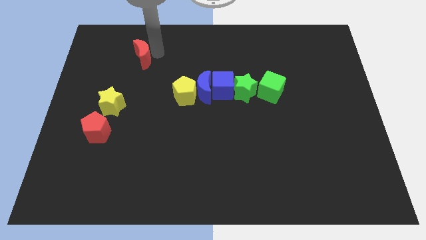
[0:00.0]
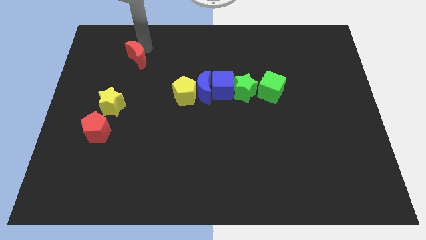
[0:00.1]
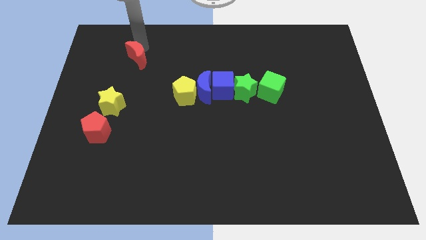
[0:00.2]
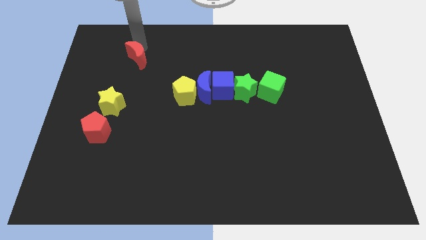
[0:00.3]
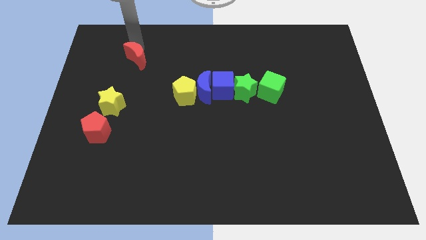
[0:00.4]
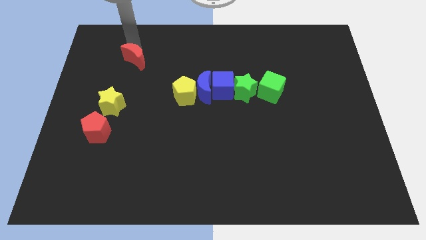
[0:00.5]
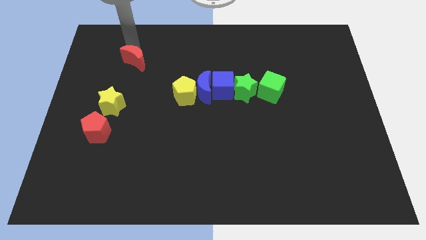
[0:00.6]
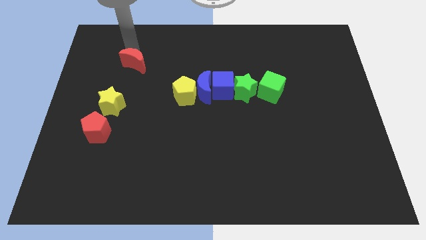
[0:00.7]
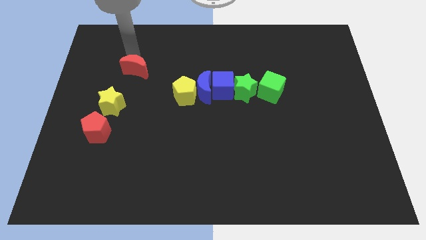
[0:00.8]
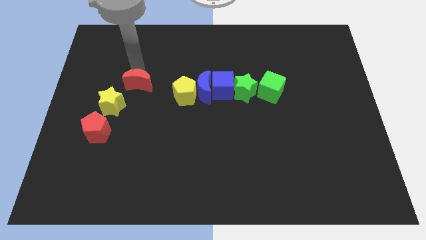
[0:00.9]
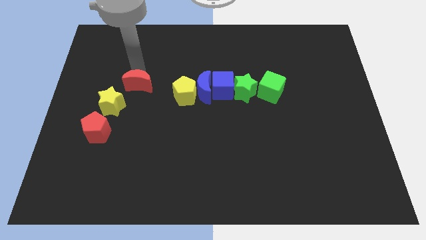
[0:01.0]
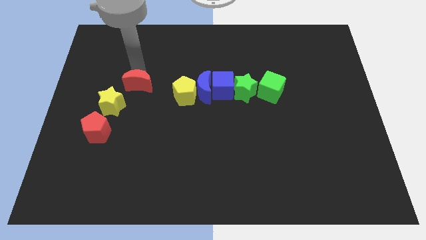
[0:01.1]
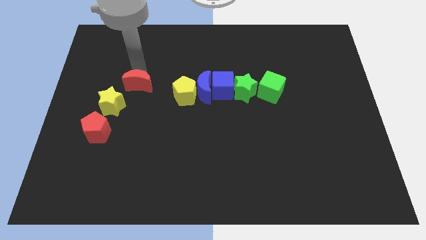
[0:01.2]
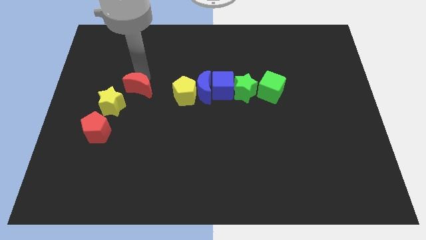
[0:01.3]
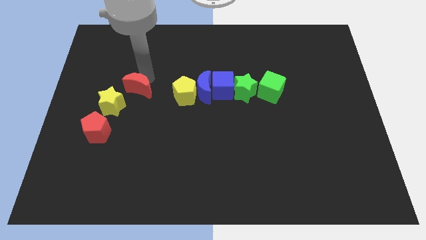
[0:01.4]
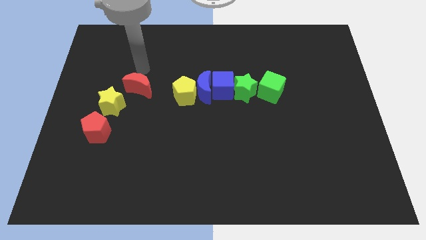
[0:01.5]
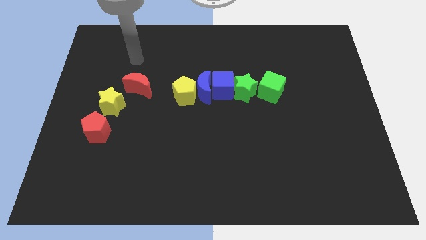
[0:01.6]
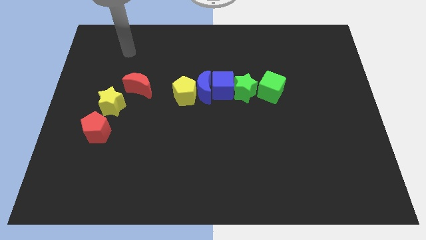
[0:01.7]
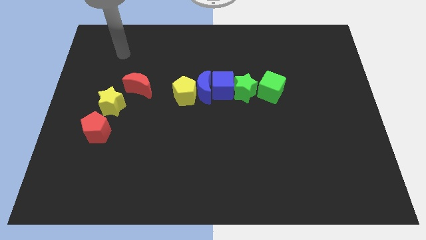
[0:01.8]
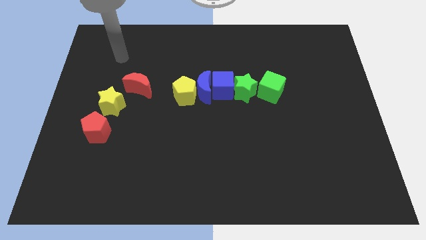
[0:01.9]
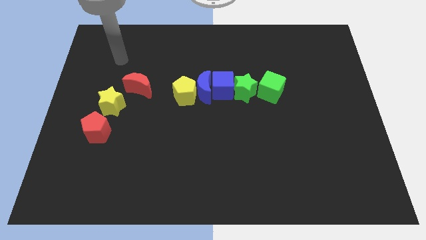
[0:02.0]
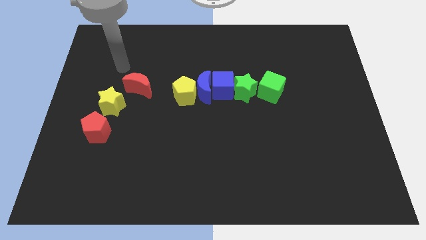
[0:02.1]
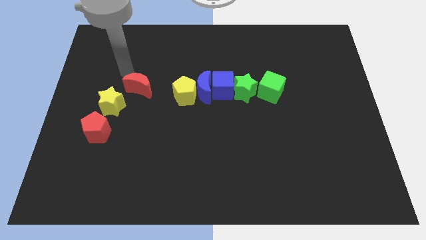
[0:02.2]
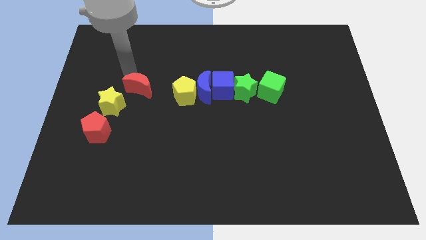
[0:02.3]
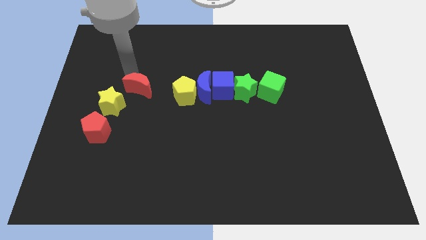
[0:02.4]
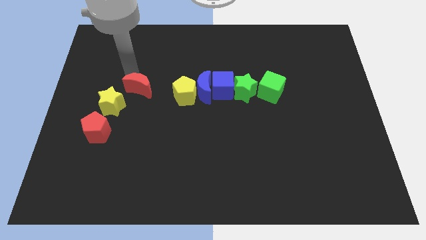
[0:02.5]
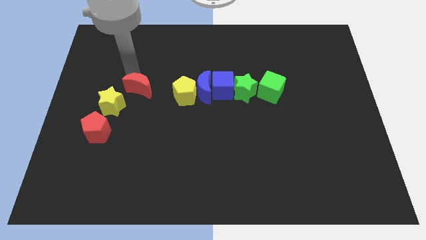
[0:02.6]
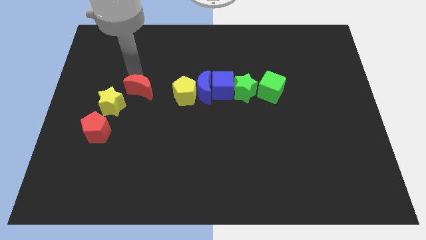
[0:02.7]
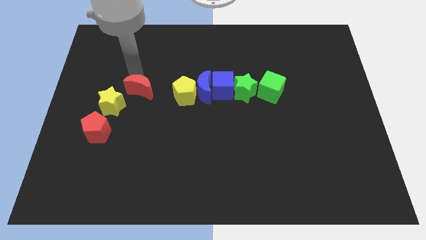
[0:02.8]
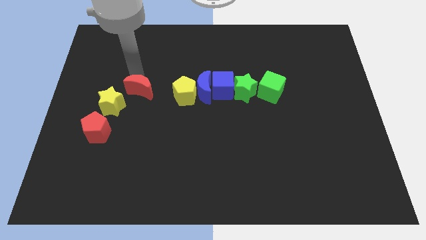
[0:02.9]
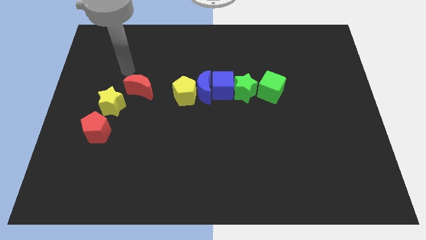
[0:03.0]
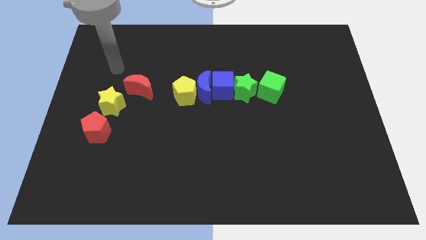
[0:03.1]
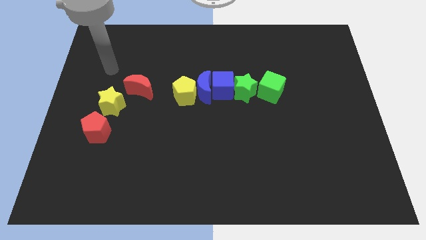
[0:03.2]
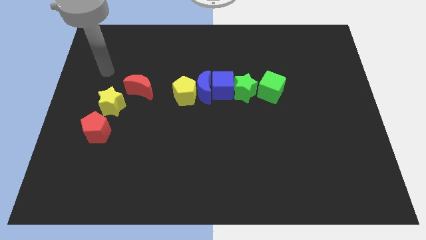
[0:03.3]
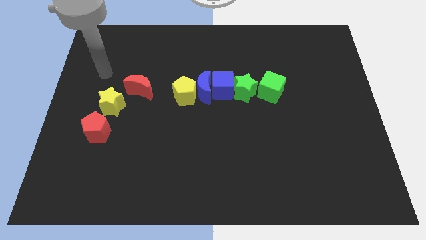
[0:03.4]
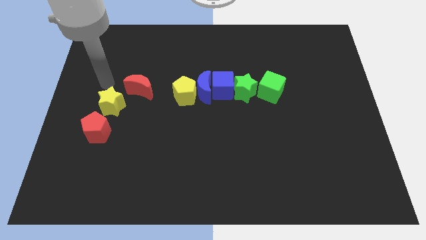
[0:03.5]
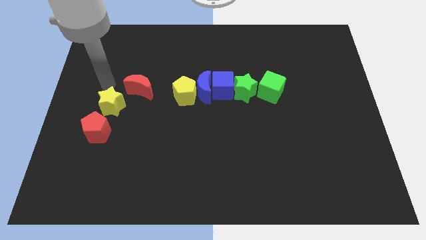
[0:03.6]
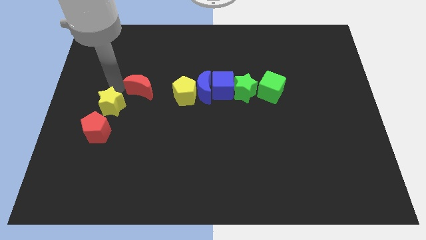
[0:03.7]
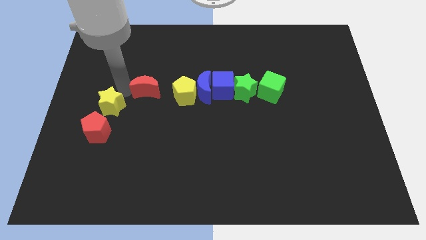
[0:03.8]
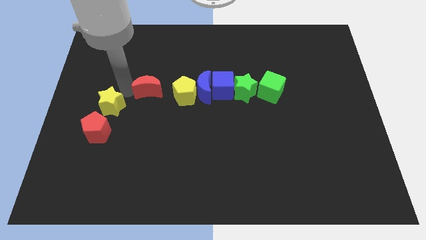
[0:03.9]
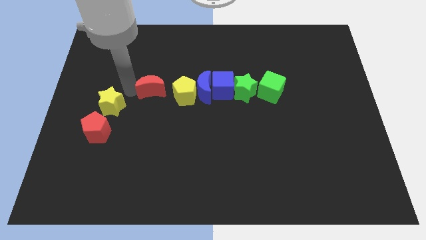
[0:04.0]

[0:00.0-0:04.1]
place red moon to the left of yellow pentagon

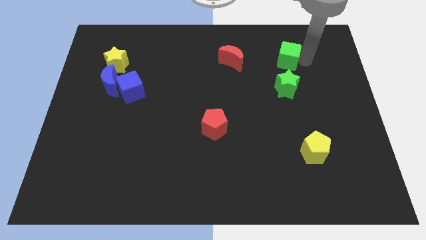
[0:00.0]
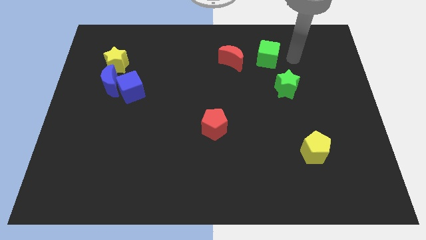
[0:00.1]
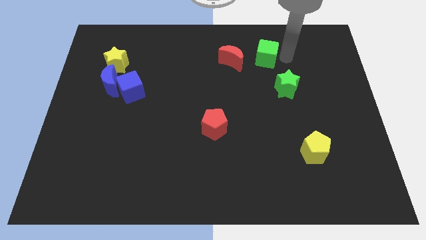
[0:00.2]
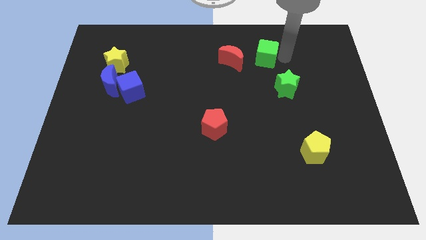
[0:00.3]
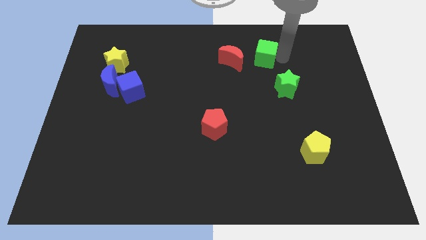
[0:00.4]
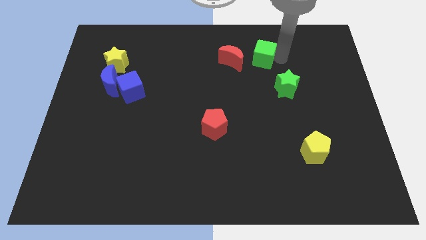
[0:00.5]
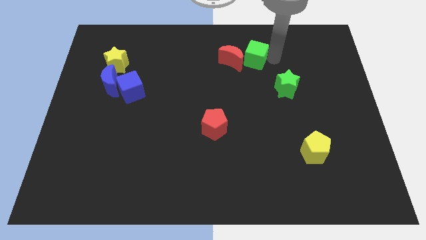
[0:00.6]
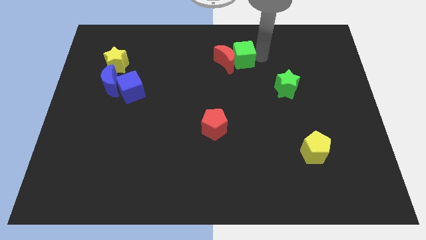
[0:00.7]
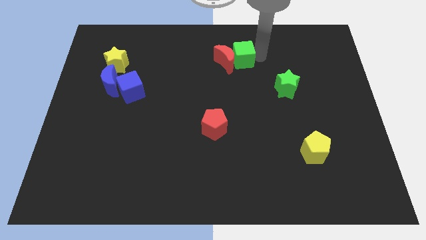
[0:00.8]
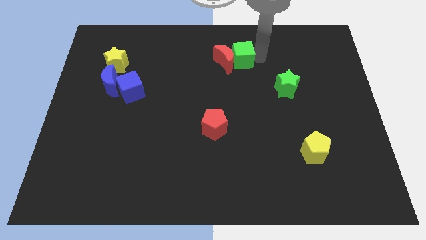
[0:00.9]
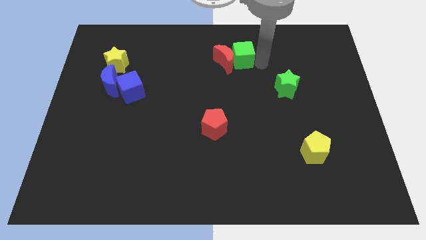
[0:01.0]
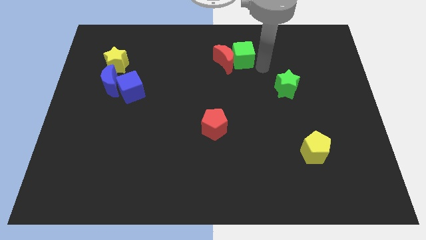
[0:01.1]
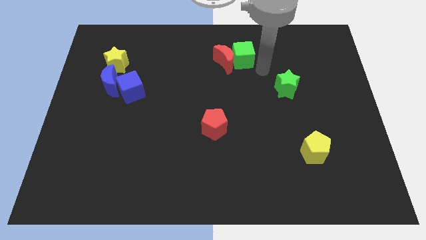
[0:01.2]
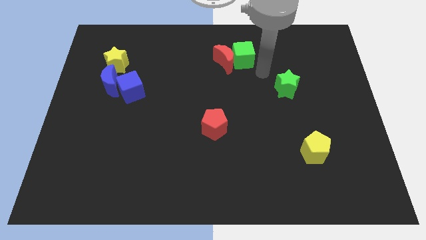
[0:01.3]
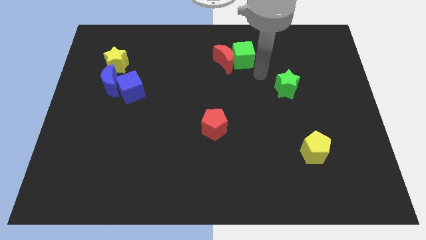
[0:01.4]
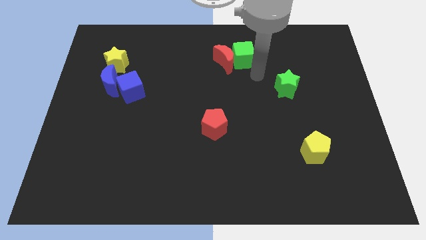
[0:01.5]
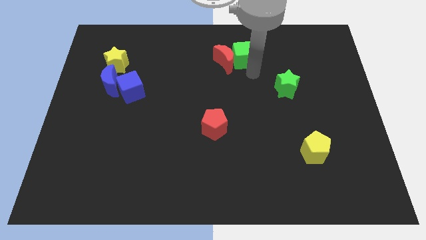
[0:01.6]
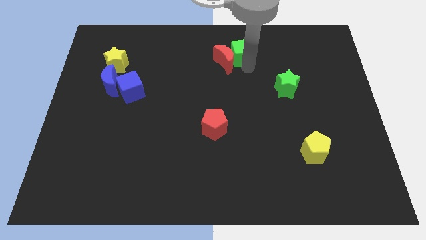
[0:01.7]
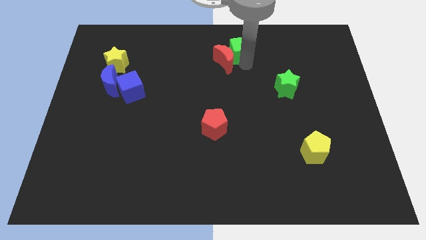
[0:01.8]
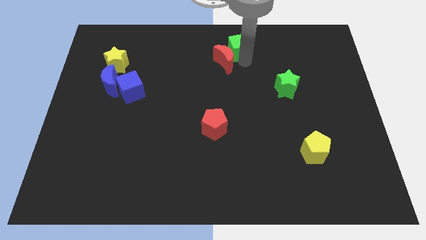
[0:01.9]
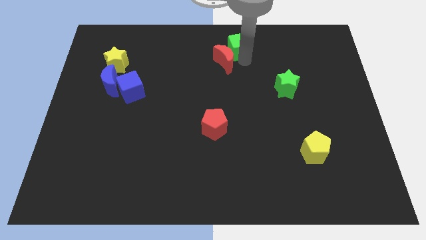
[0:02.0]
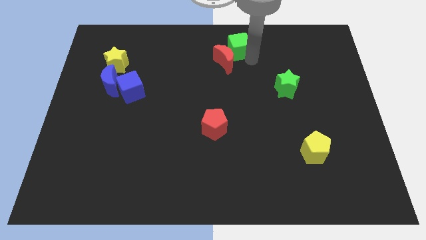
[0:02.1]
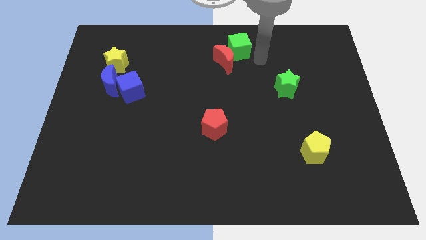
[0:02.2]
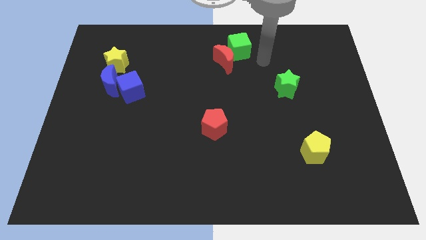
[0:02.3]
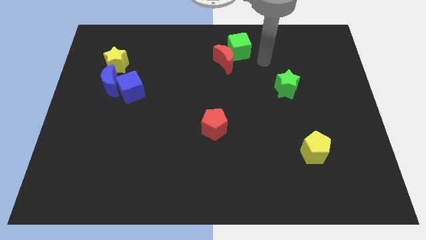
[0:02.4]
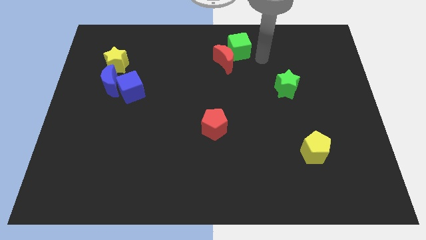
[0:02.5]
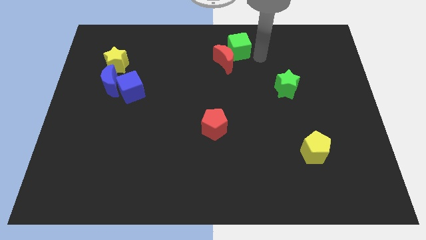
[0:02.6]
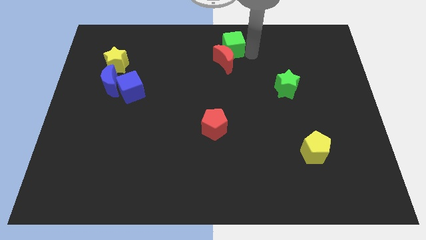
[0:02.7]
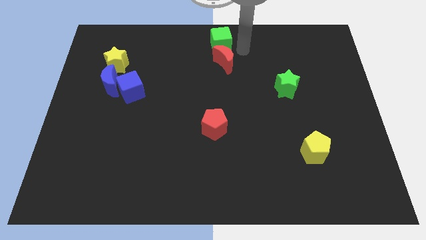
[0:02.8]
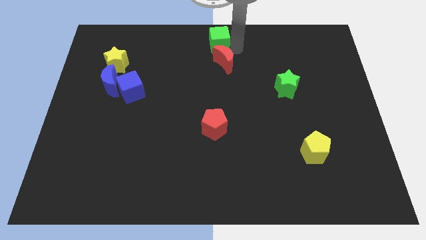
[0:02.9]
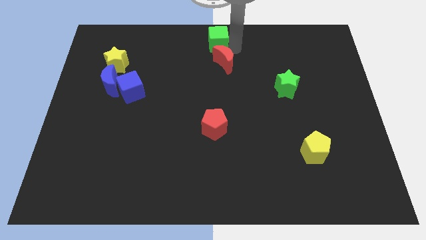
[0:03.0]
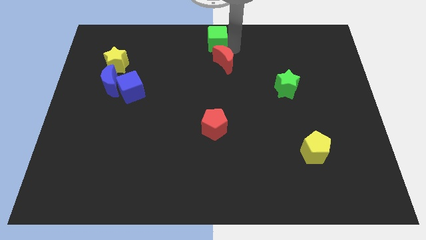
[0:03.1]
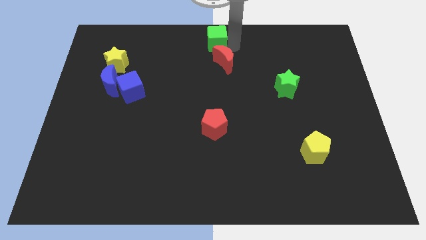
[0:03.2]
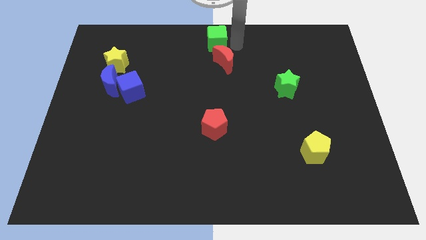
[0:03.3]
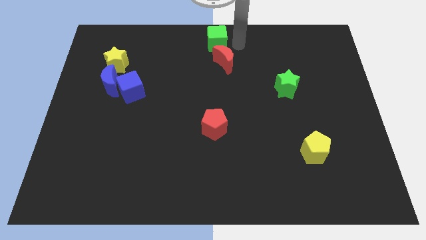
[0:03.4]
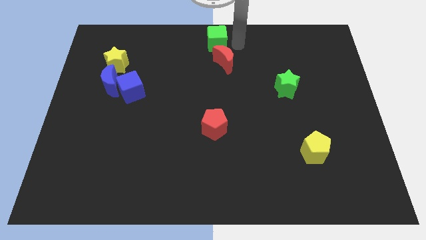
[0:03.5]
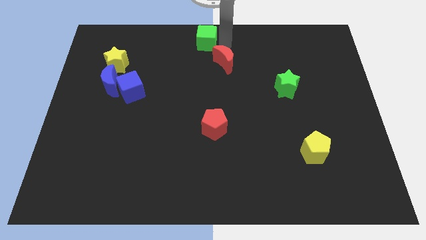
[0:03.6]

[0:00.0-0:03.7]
place the green cube at the top center of the board

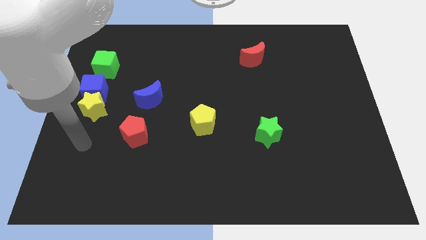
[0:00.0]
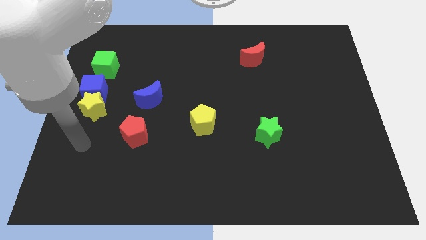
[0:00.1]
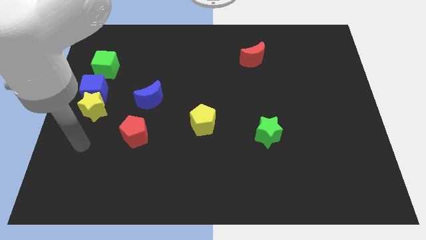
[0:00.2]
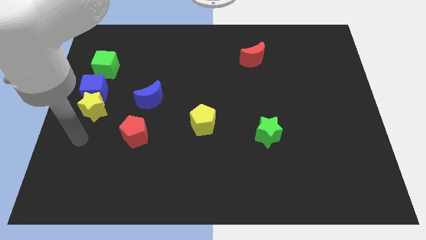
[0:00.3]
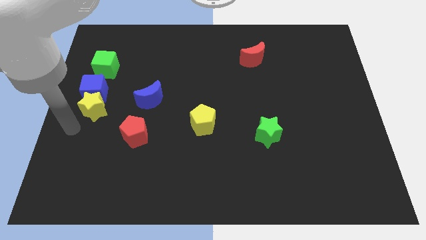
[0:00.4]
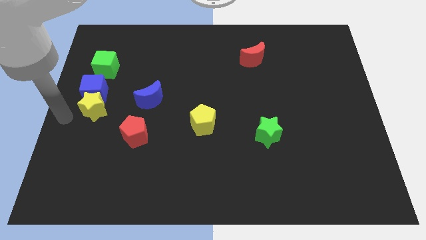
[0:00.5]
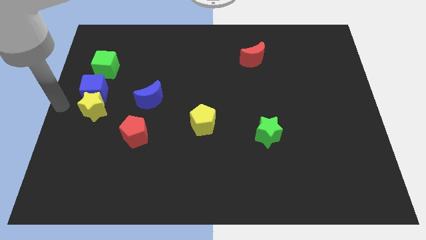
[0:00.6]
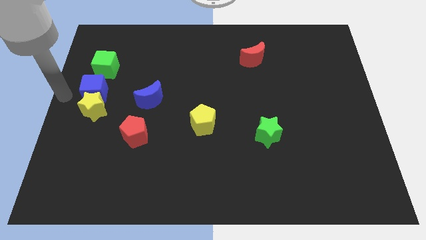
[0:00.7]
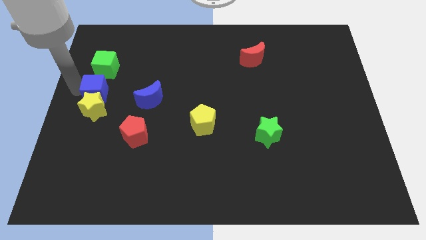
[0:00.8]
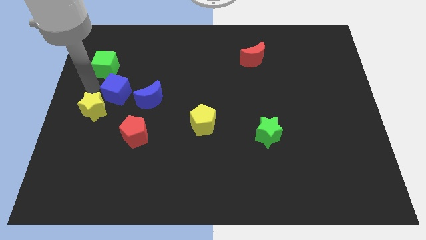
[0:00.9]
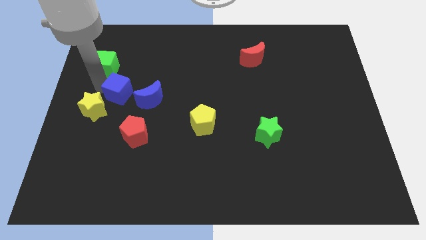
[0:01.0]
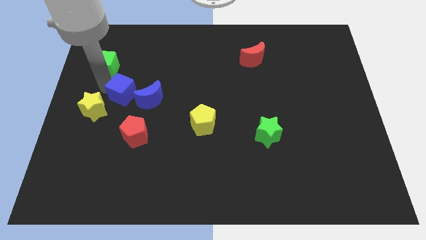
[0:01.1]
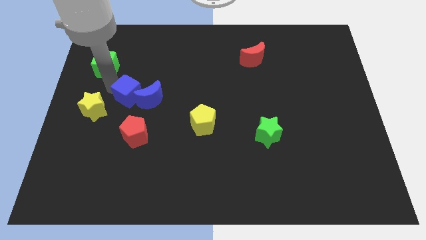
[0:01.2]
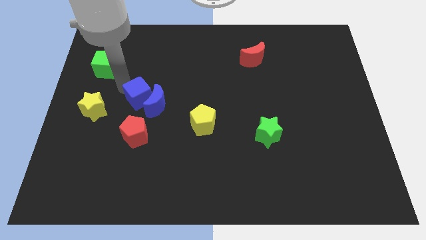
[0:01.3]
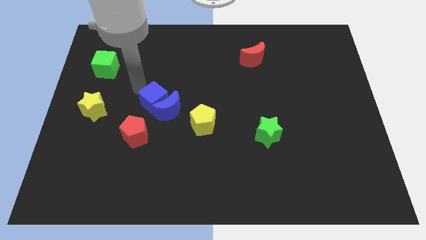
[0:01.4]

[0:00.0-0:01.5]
move the blue cube into the blue crescent
